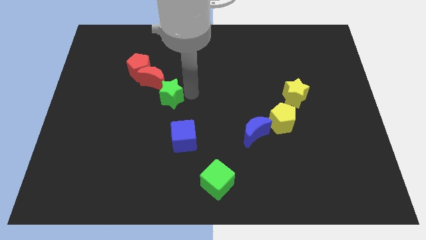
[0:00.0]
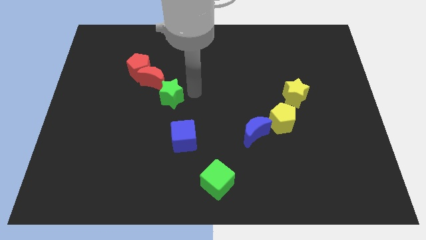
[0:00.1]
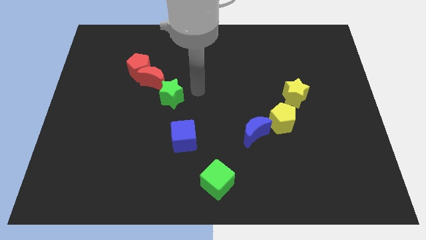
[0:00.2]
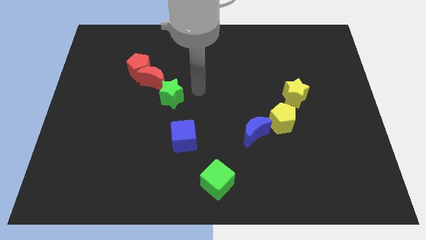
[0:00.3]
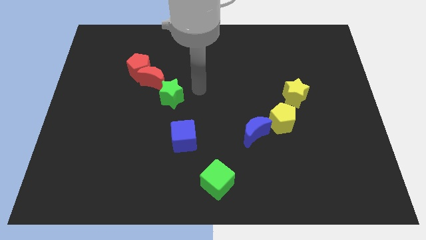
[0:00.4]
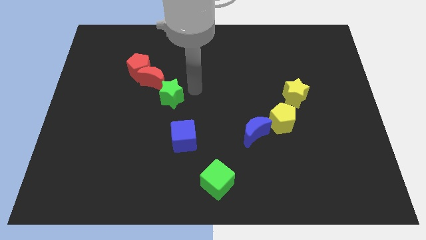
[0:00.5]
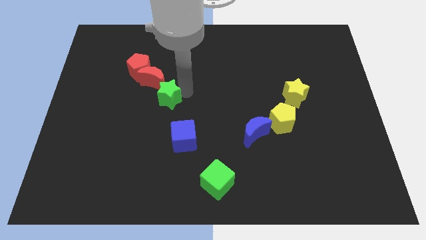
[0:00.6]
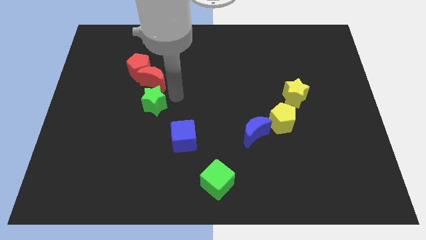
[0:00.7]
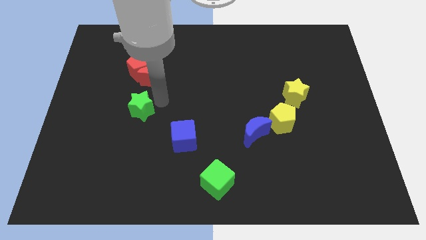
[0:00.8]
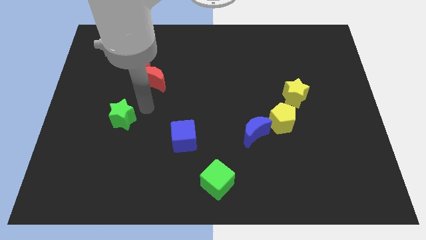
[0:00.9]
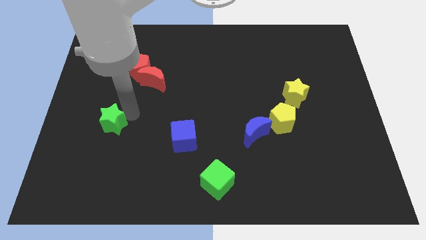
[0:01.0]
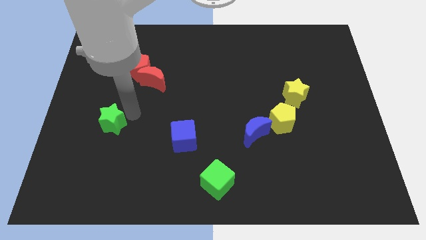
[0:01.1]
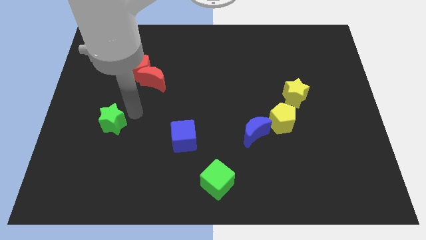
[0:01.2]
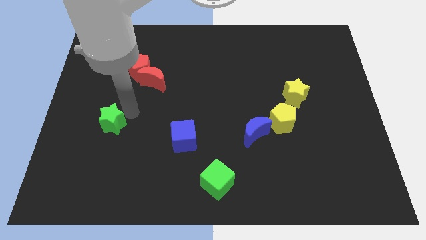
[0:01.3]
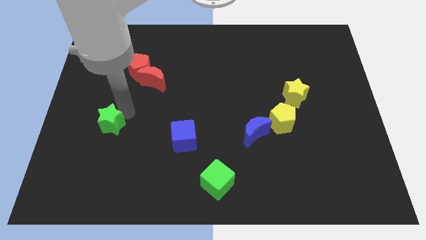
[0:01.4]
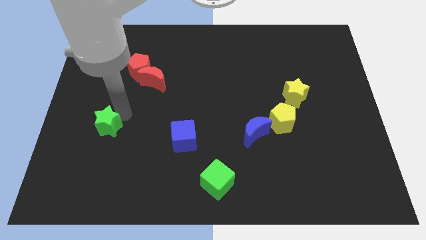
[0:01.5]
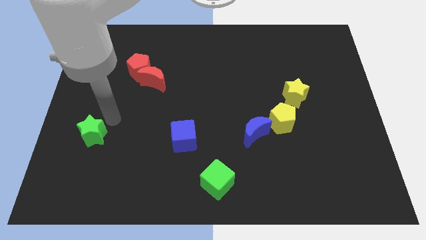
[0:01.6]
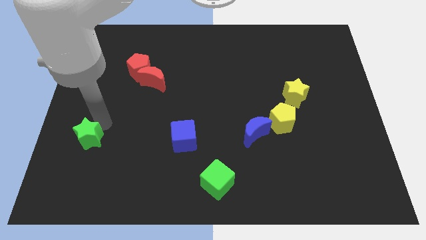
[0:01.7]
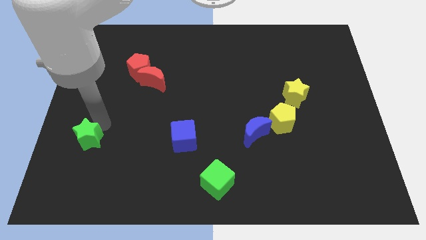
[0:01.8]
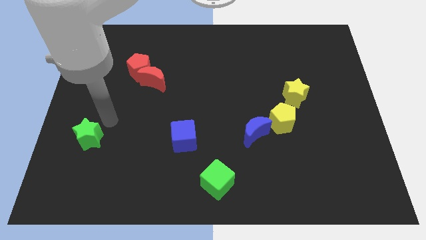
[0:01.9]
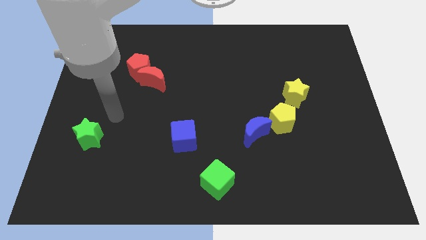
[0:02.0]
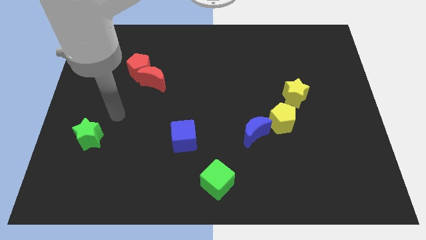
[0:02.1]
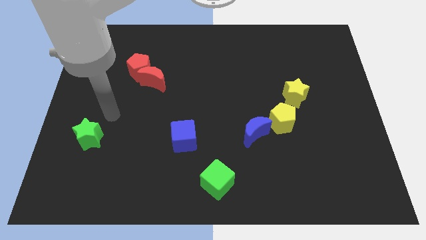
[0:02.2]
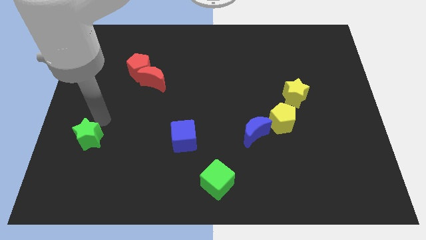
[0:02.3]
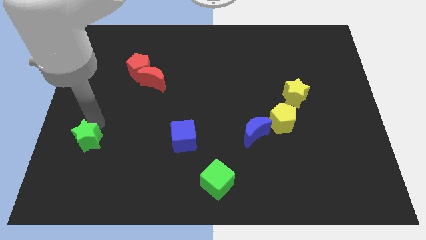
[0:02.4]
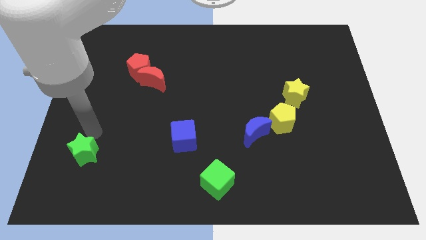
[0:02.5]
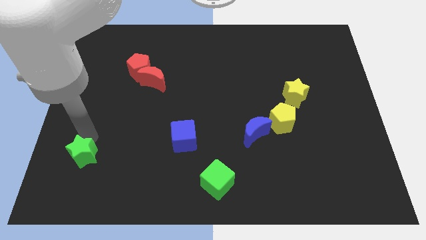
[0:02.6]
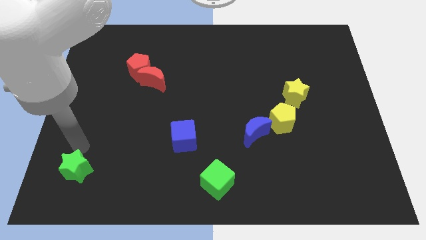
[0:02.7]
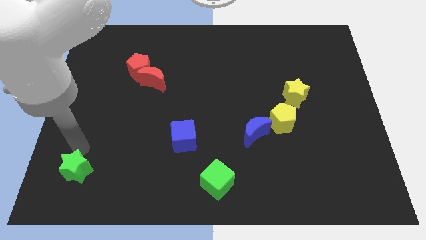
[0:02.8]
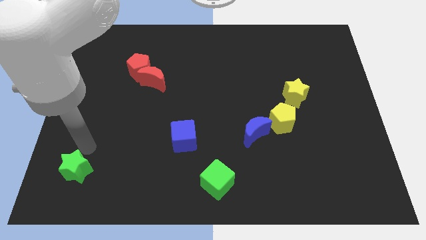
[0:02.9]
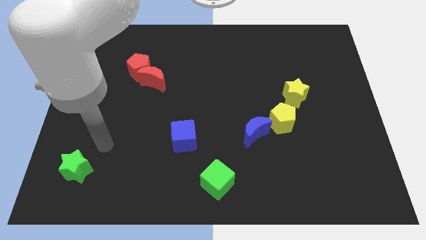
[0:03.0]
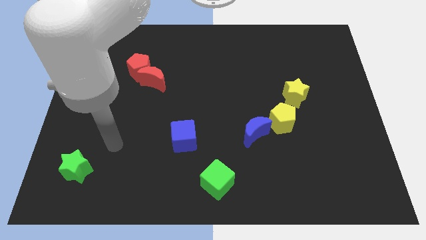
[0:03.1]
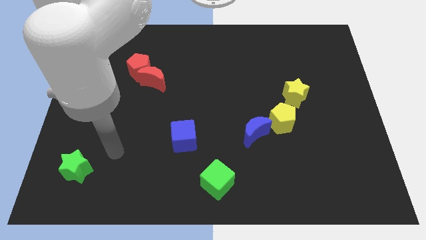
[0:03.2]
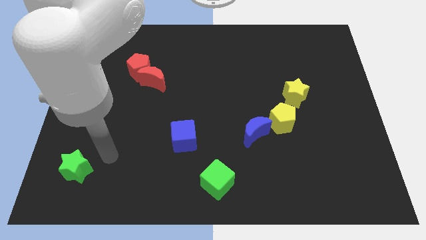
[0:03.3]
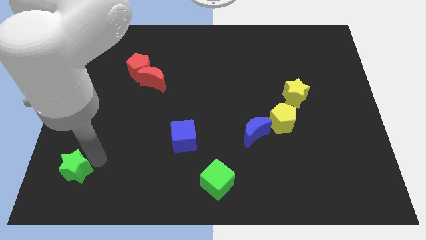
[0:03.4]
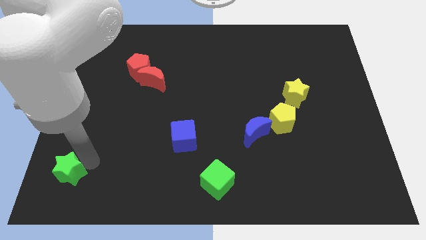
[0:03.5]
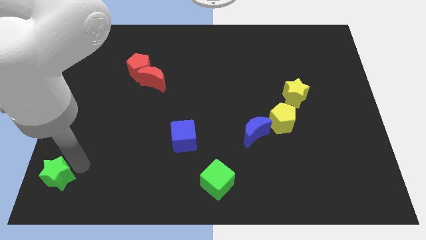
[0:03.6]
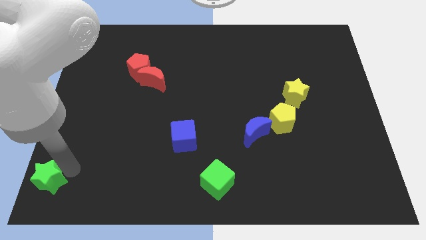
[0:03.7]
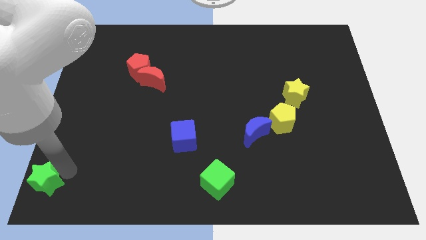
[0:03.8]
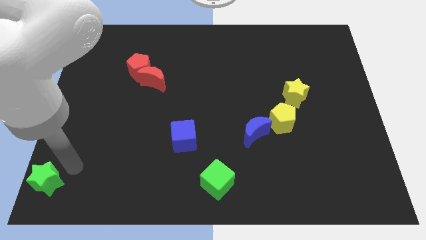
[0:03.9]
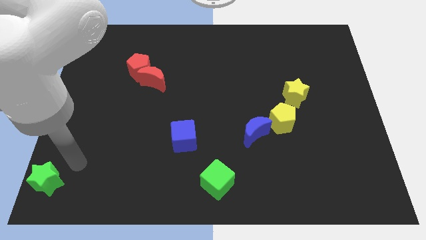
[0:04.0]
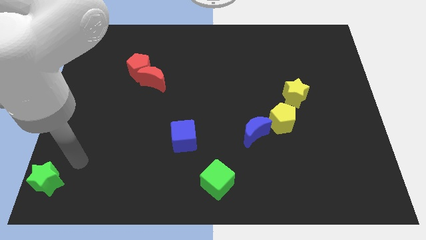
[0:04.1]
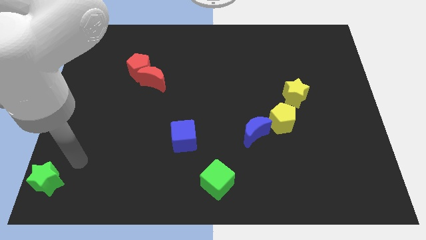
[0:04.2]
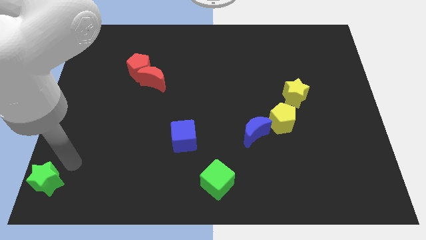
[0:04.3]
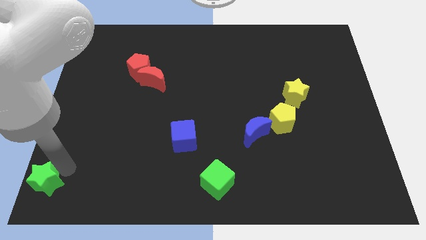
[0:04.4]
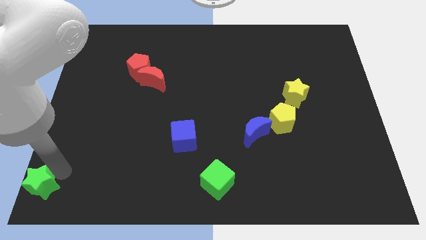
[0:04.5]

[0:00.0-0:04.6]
push the green star bottom left

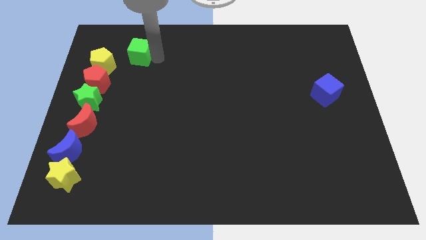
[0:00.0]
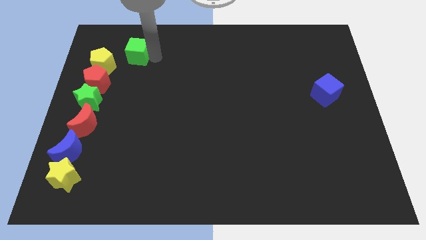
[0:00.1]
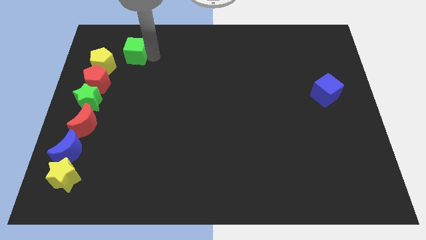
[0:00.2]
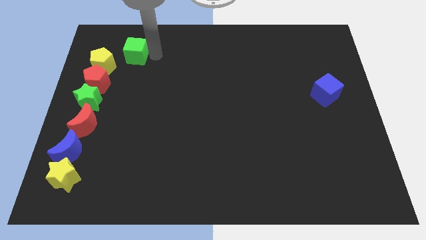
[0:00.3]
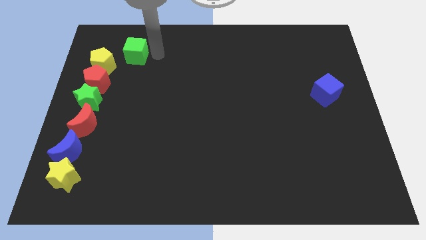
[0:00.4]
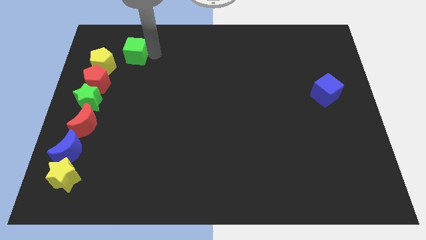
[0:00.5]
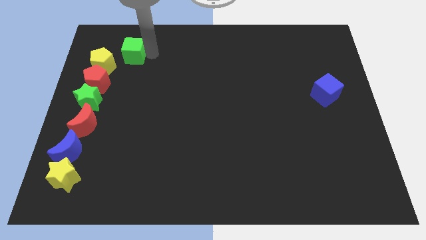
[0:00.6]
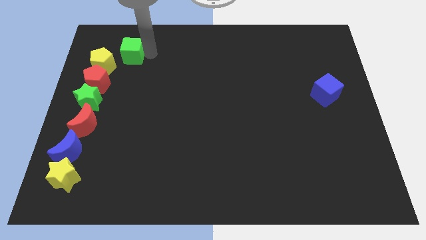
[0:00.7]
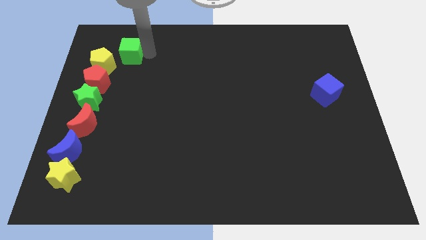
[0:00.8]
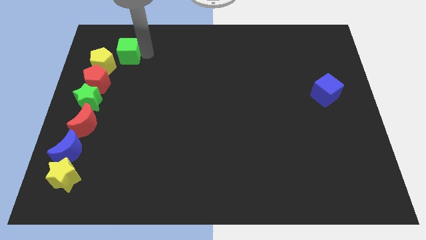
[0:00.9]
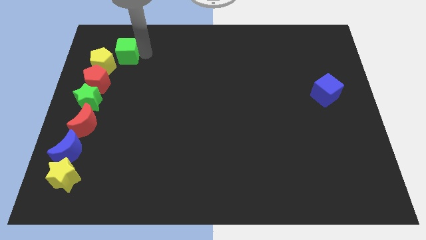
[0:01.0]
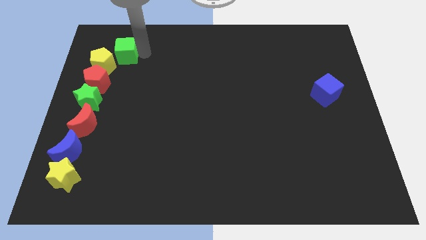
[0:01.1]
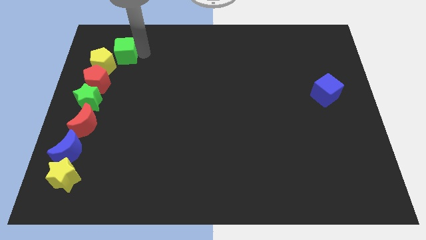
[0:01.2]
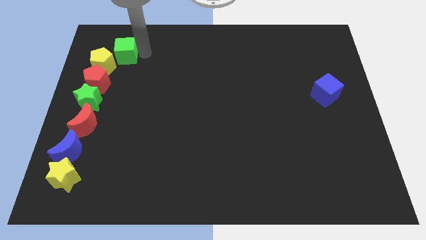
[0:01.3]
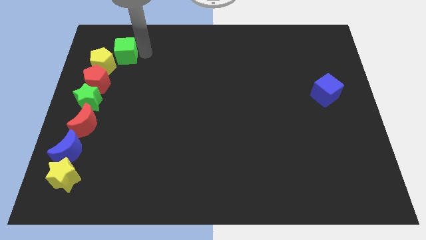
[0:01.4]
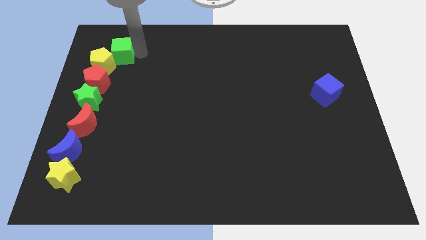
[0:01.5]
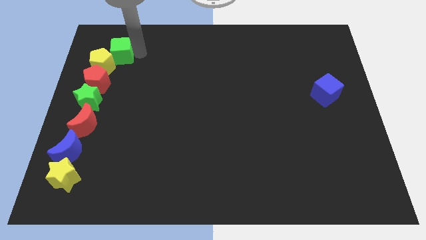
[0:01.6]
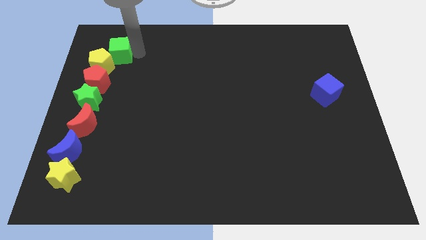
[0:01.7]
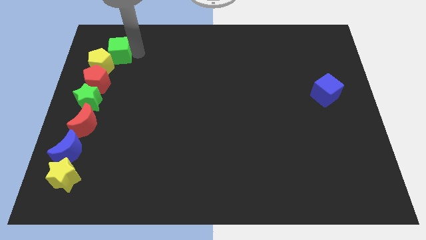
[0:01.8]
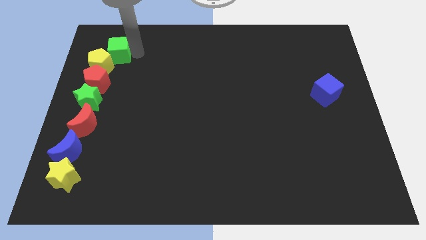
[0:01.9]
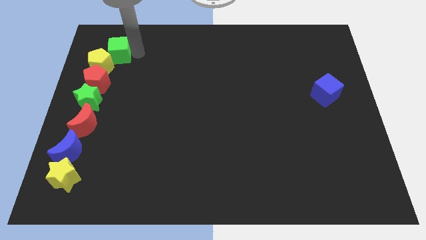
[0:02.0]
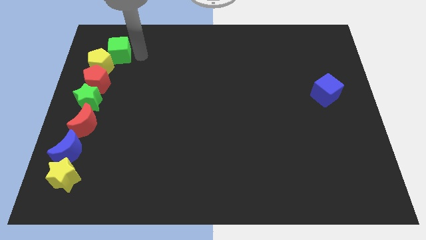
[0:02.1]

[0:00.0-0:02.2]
push the green cube to the top left of the board

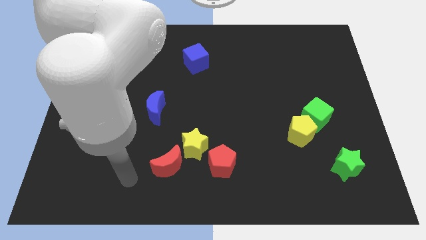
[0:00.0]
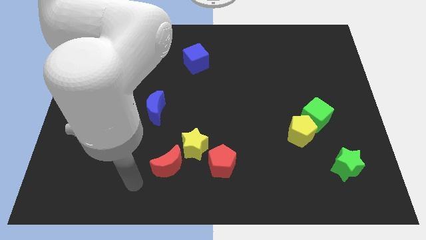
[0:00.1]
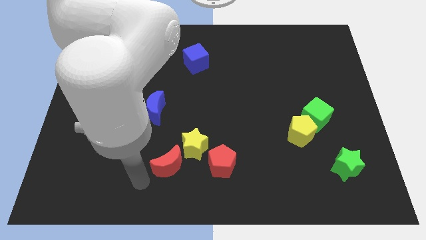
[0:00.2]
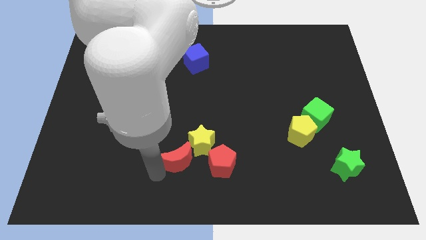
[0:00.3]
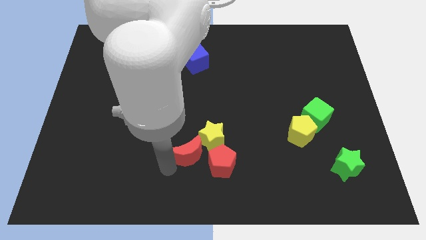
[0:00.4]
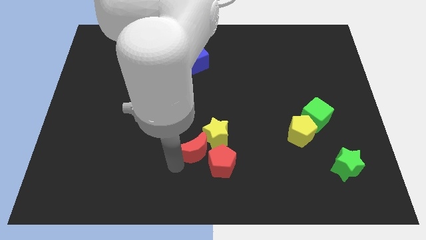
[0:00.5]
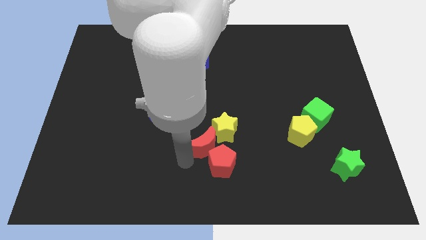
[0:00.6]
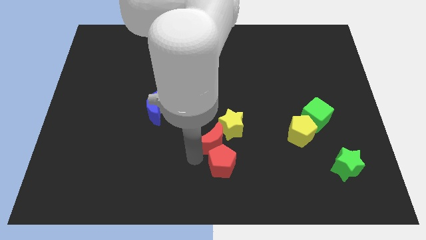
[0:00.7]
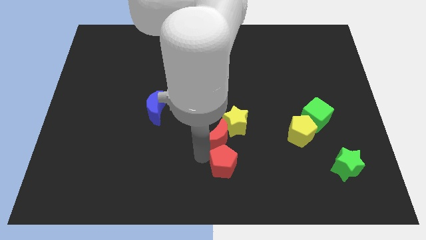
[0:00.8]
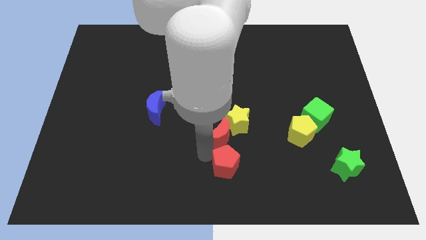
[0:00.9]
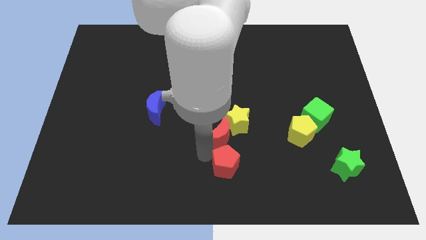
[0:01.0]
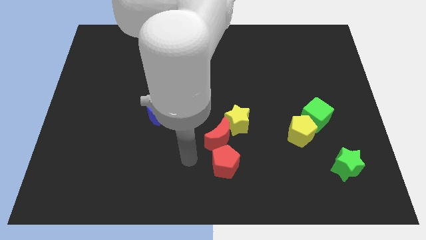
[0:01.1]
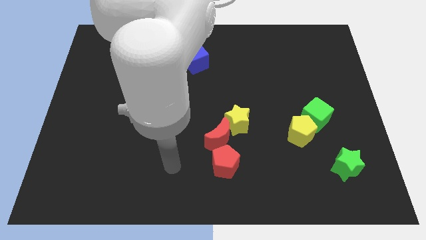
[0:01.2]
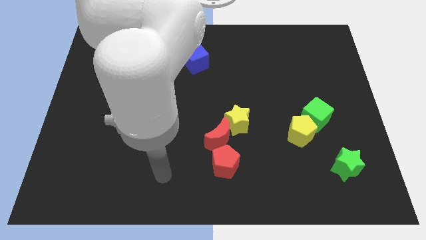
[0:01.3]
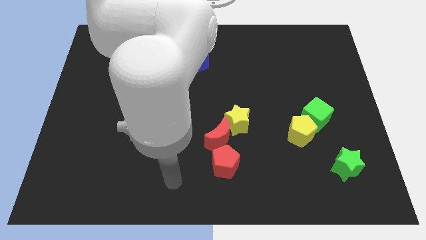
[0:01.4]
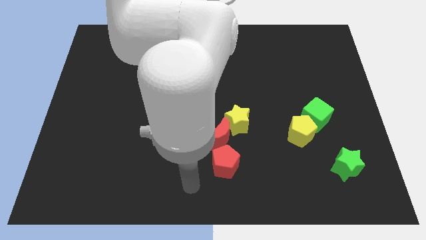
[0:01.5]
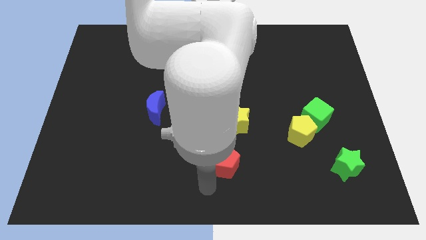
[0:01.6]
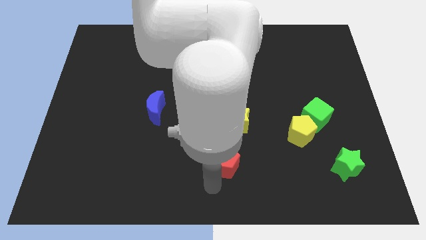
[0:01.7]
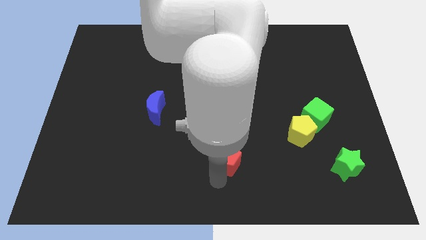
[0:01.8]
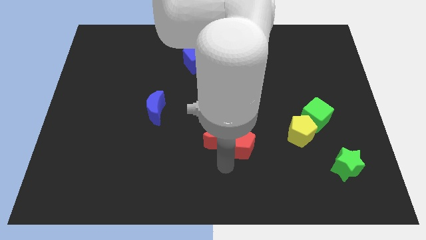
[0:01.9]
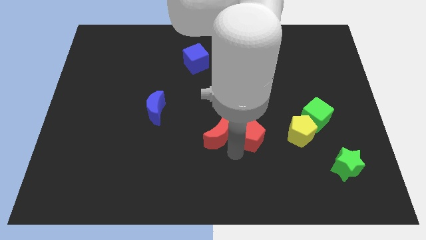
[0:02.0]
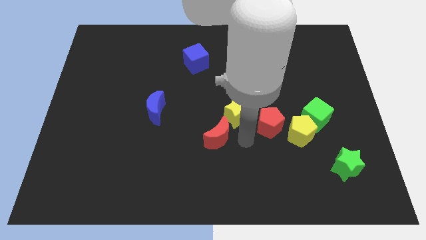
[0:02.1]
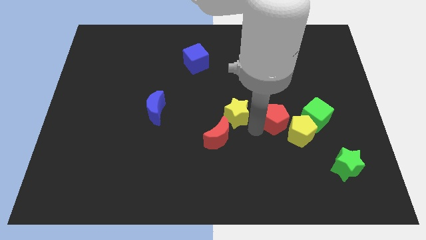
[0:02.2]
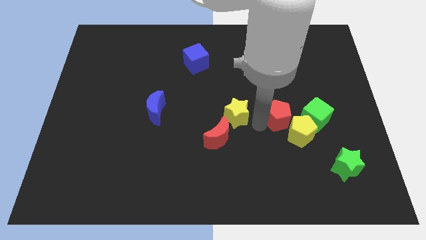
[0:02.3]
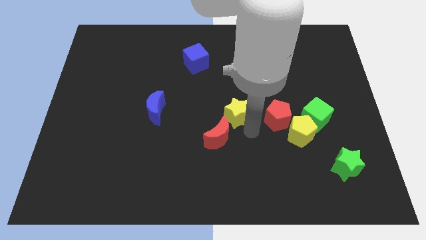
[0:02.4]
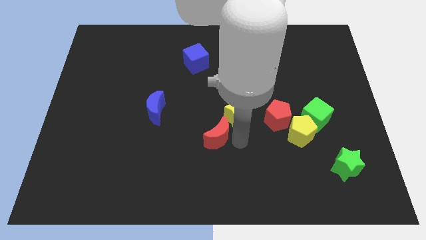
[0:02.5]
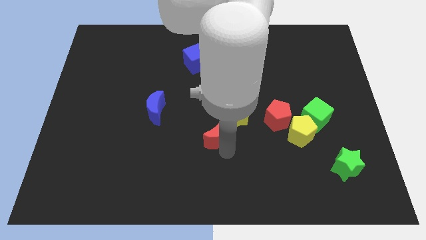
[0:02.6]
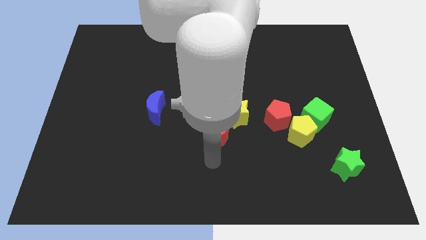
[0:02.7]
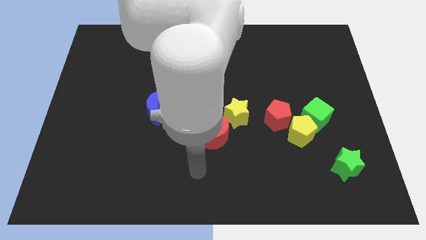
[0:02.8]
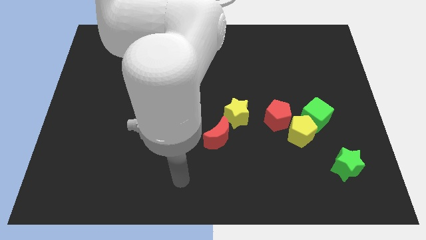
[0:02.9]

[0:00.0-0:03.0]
move the red crescent with yellow star to the center of the board
